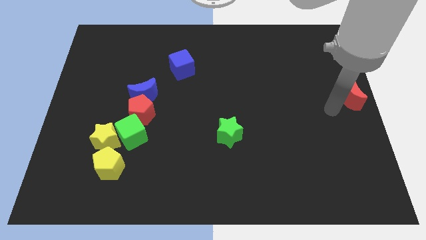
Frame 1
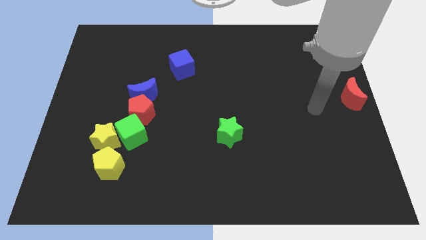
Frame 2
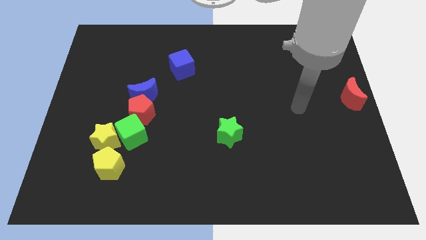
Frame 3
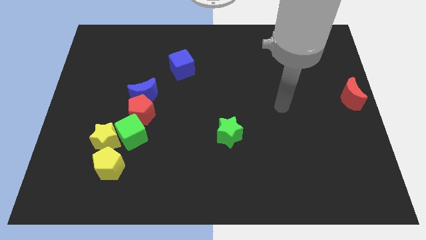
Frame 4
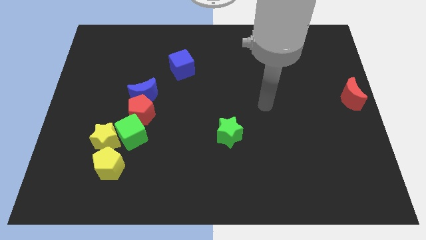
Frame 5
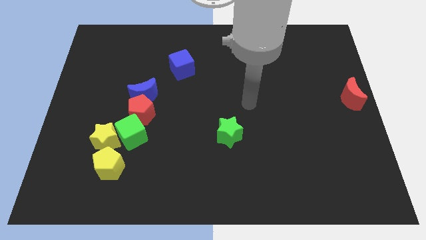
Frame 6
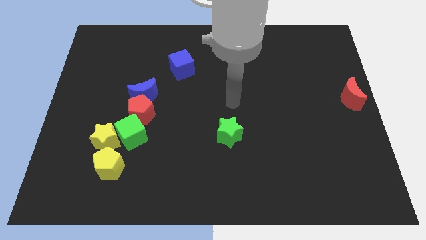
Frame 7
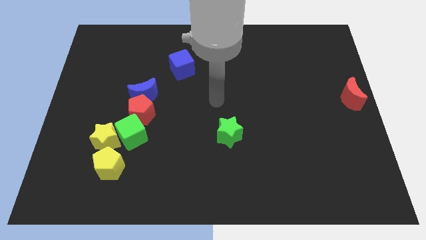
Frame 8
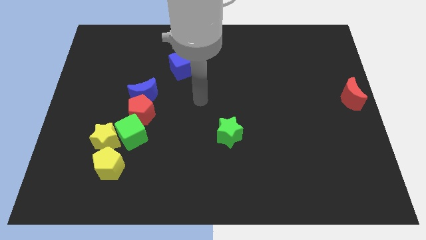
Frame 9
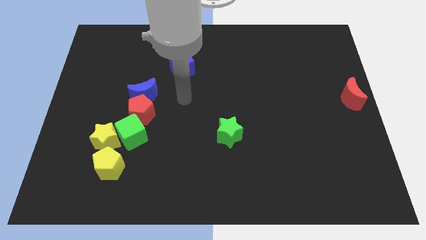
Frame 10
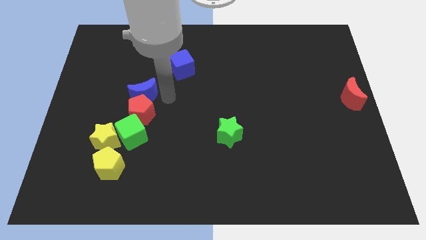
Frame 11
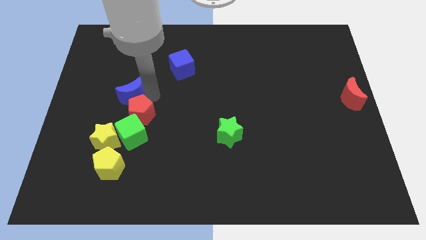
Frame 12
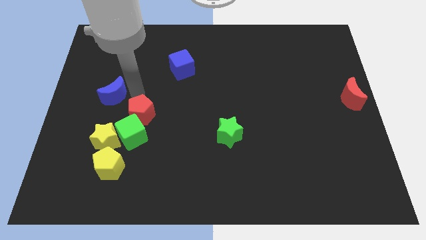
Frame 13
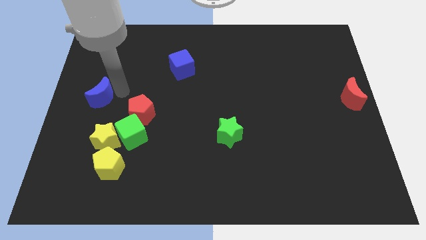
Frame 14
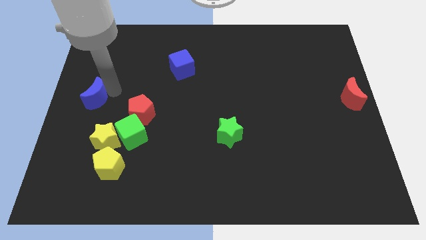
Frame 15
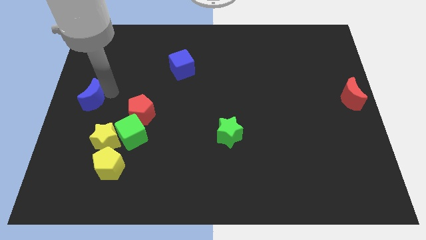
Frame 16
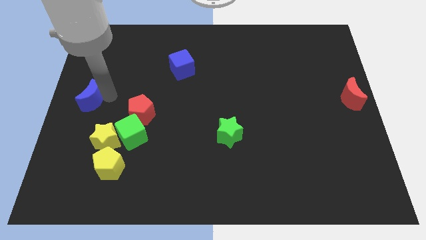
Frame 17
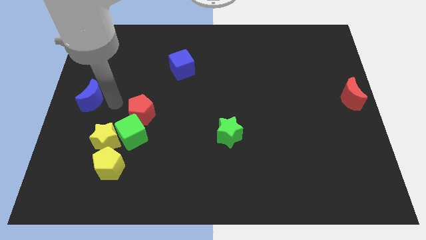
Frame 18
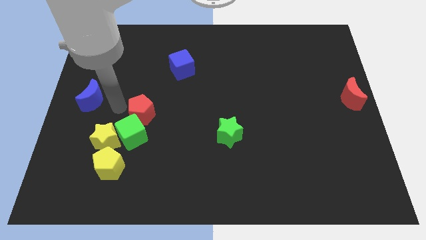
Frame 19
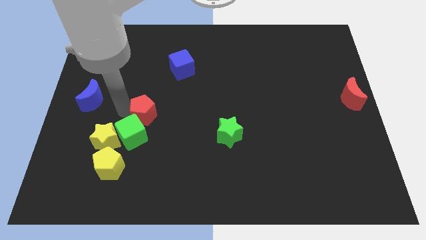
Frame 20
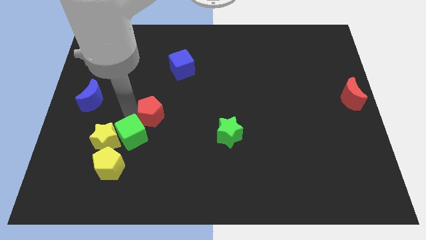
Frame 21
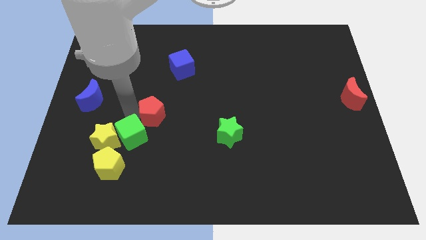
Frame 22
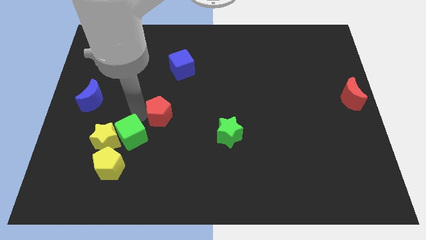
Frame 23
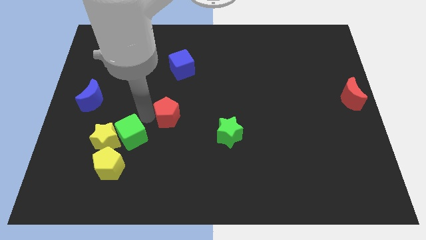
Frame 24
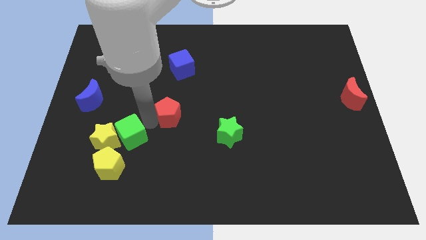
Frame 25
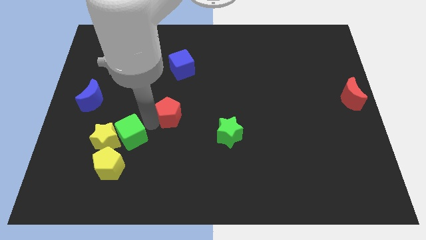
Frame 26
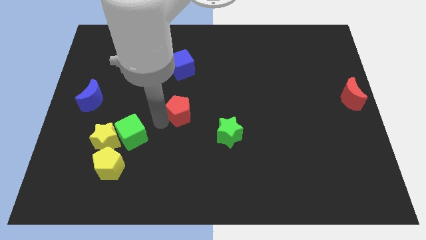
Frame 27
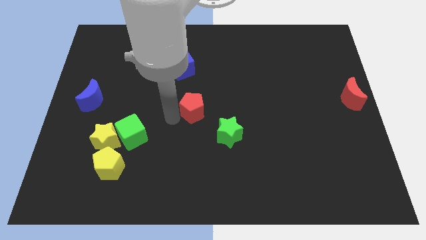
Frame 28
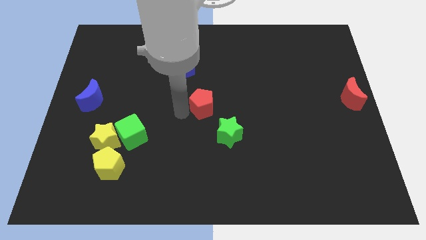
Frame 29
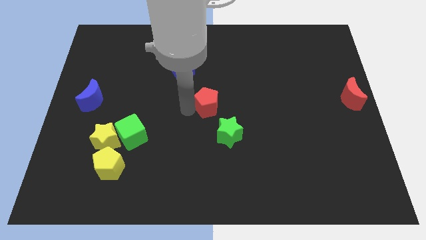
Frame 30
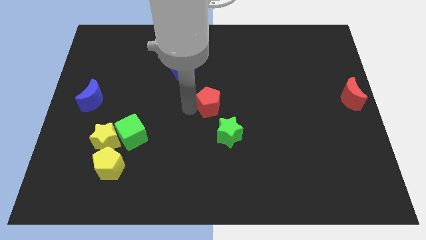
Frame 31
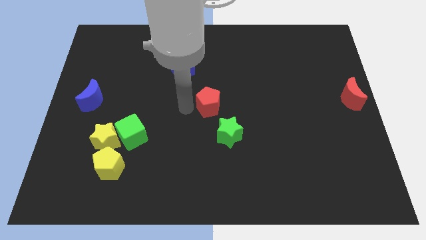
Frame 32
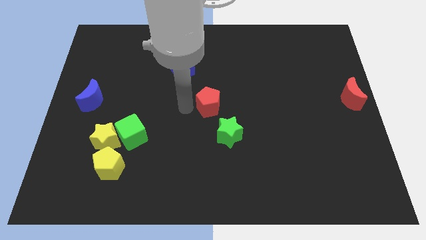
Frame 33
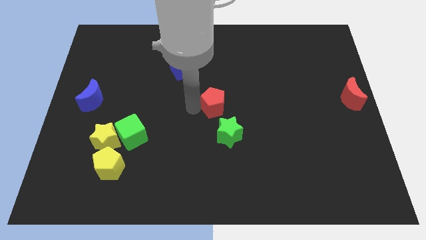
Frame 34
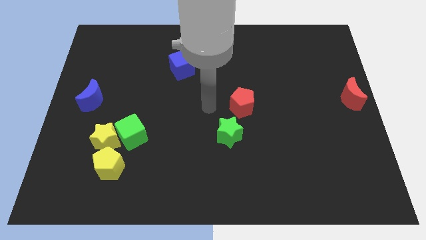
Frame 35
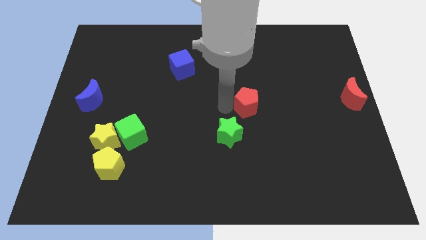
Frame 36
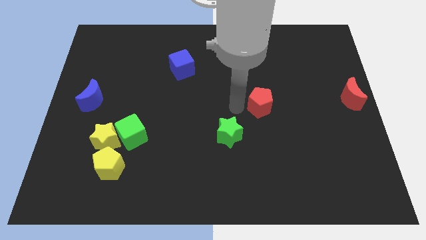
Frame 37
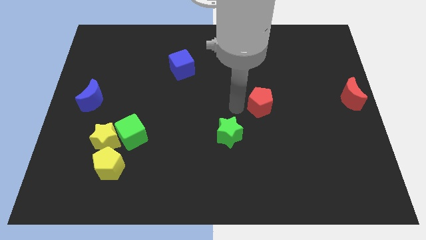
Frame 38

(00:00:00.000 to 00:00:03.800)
push red pentagon towards middle right side of the board

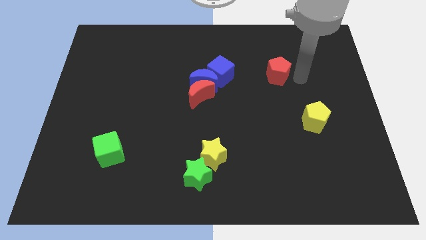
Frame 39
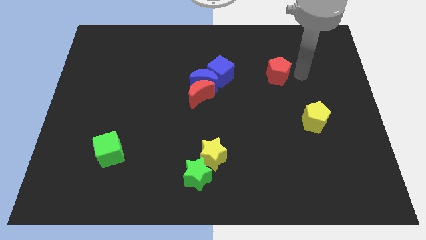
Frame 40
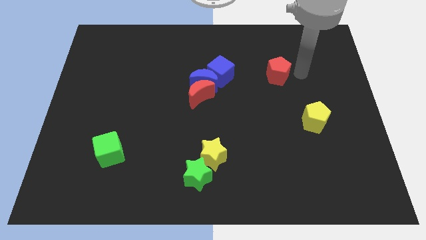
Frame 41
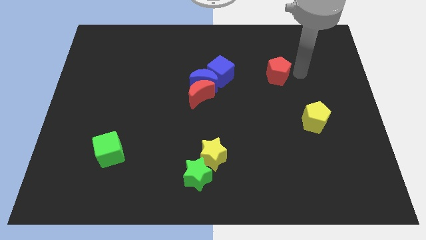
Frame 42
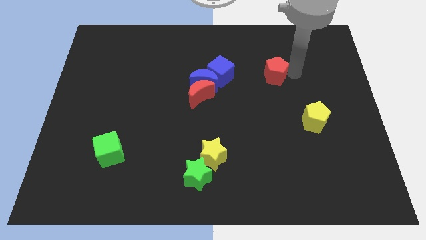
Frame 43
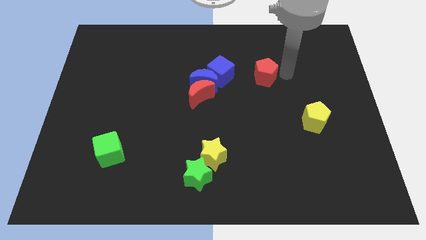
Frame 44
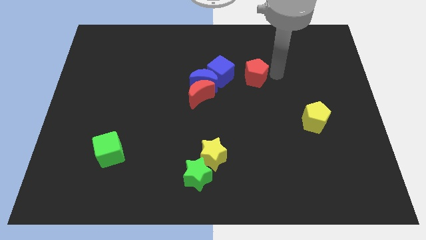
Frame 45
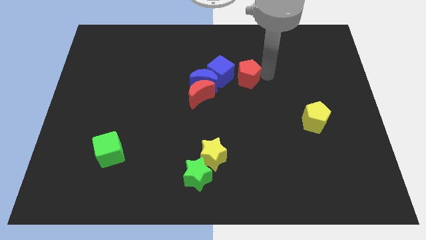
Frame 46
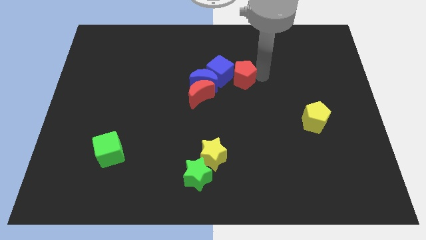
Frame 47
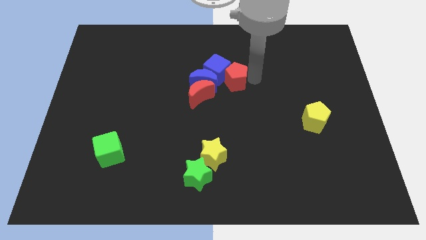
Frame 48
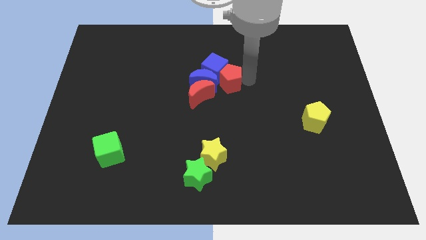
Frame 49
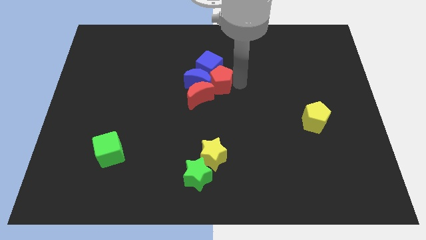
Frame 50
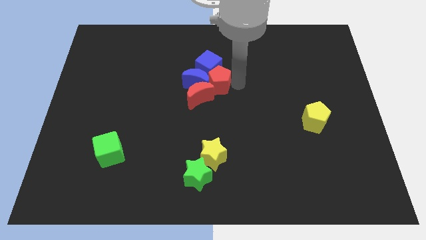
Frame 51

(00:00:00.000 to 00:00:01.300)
place the red pentagon diagonal to the red moon

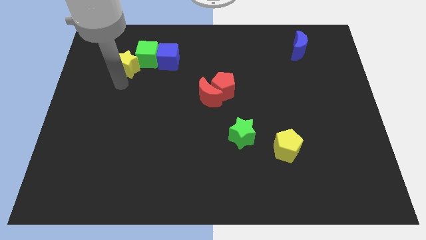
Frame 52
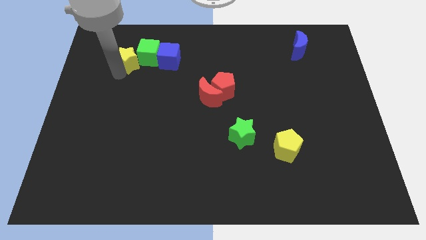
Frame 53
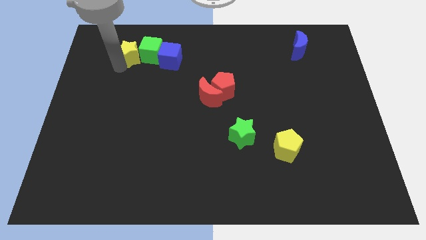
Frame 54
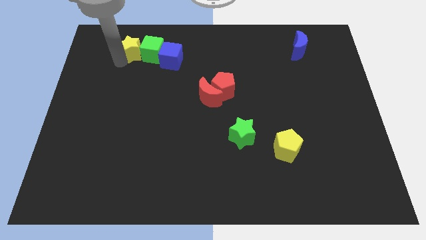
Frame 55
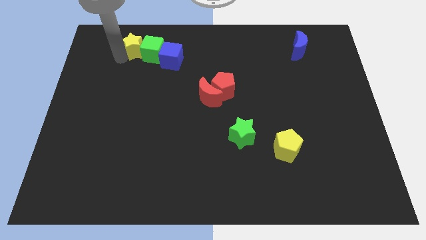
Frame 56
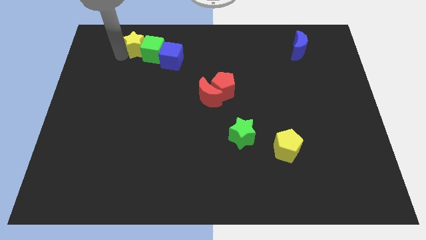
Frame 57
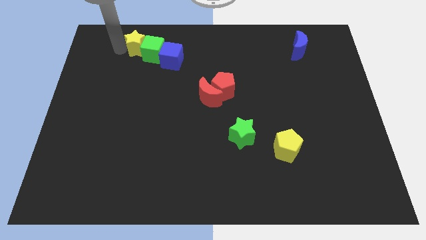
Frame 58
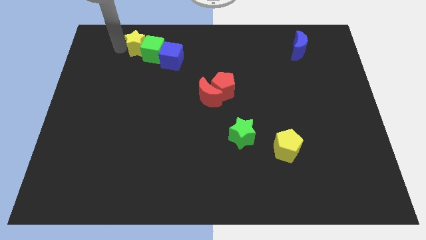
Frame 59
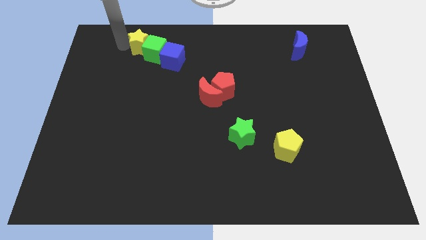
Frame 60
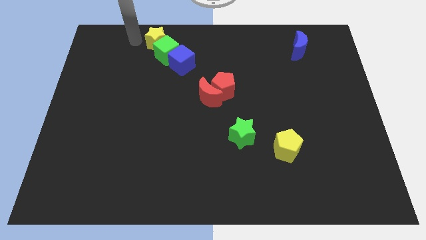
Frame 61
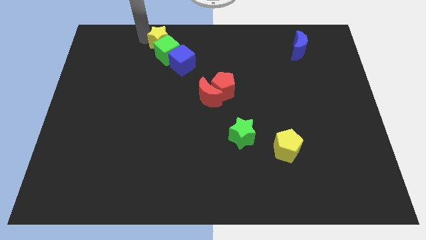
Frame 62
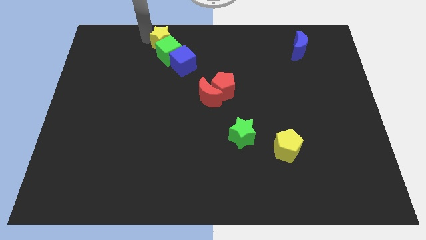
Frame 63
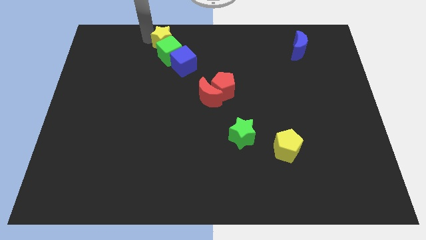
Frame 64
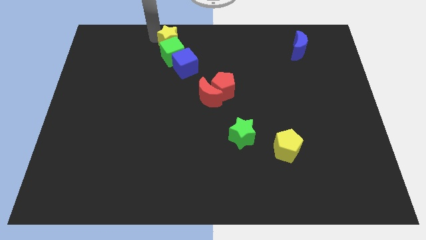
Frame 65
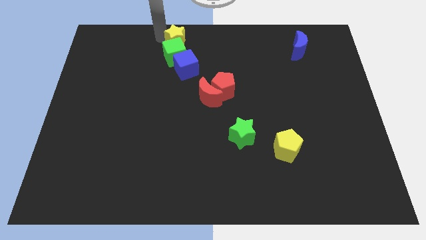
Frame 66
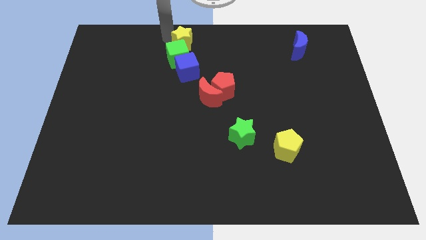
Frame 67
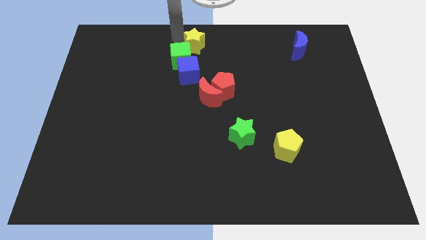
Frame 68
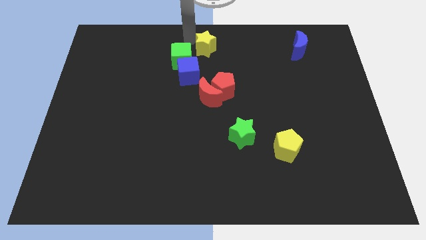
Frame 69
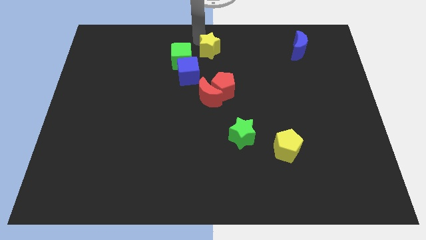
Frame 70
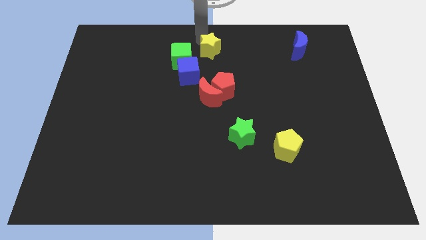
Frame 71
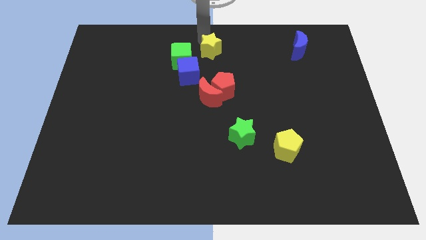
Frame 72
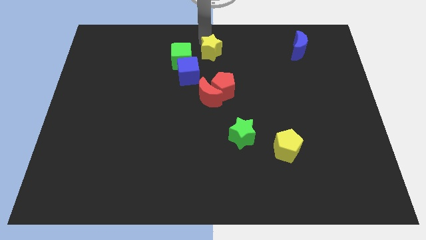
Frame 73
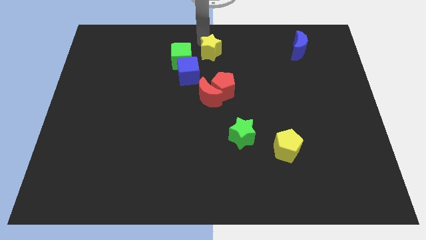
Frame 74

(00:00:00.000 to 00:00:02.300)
place the yellow star slightly top middle of the board

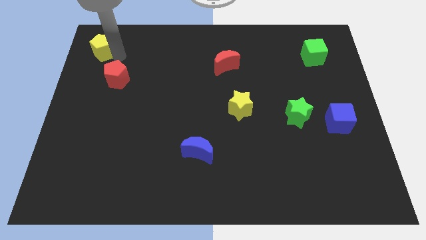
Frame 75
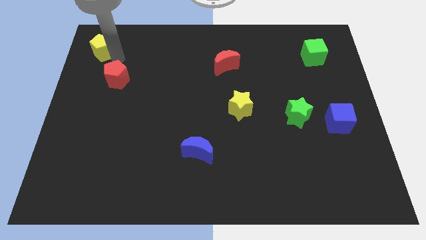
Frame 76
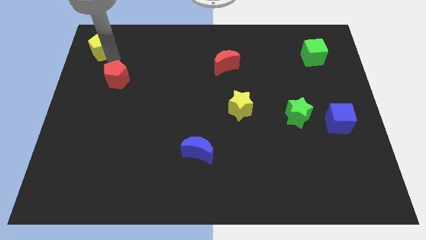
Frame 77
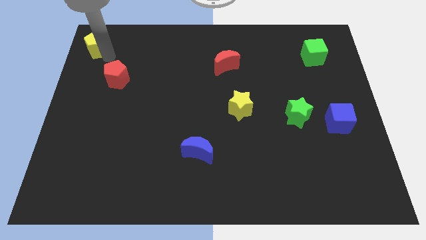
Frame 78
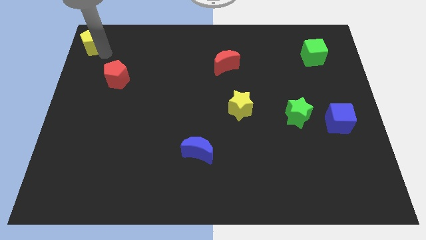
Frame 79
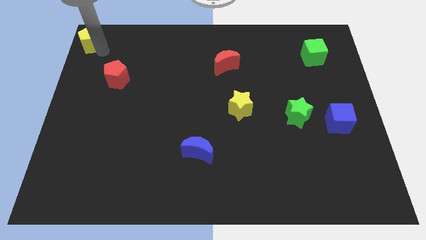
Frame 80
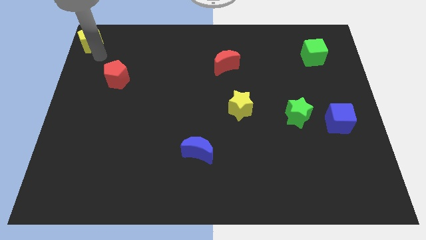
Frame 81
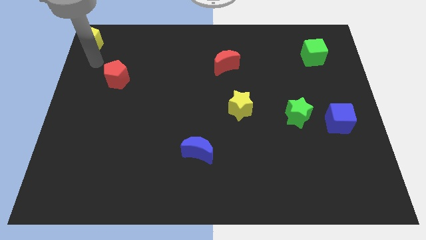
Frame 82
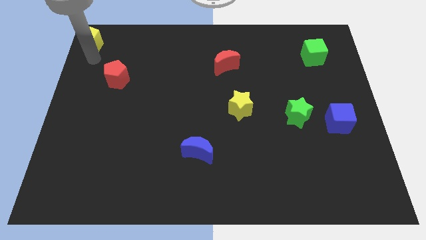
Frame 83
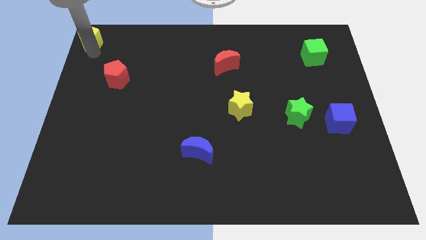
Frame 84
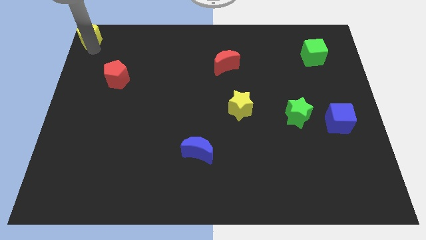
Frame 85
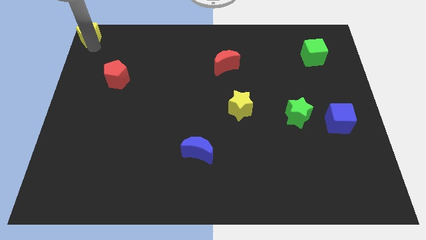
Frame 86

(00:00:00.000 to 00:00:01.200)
move the yellow pentagon to the top left corner

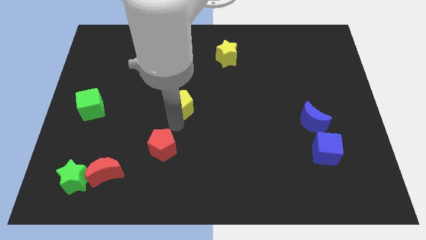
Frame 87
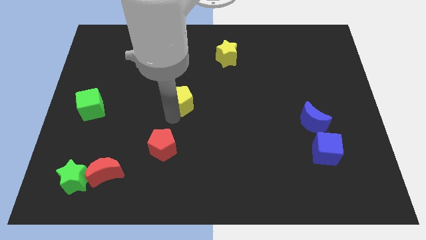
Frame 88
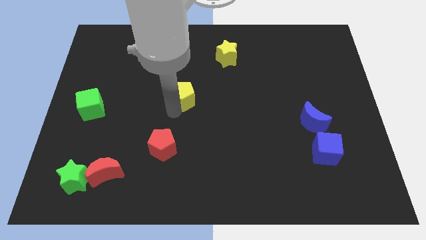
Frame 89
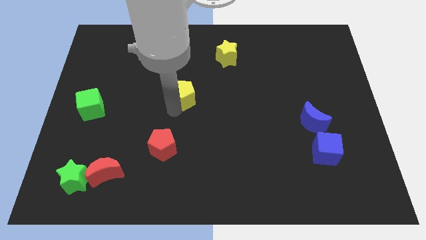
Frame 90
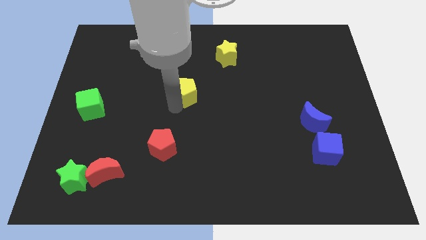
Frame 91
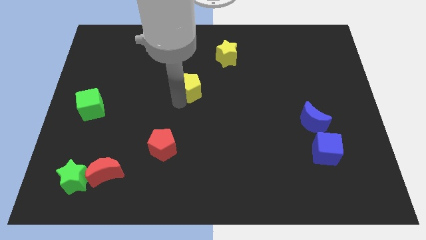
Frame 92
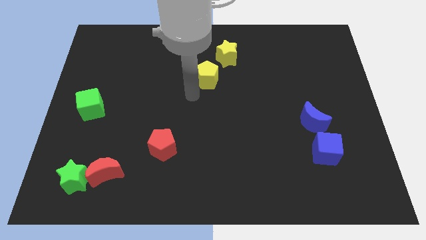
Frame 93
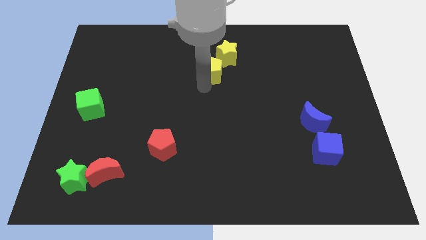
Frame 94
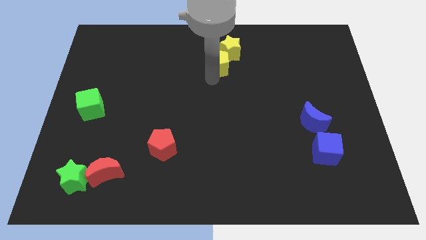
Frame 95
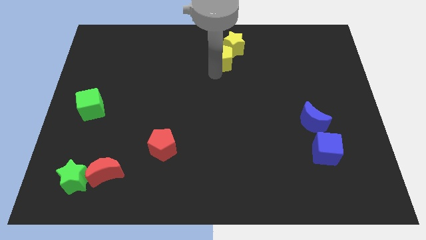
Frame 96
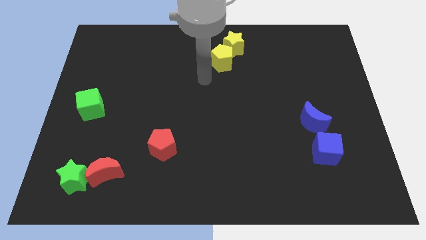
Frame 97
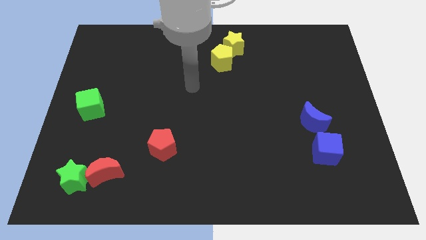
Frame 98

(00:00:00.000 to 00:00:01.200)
place the yellow pentagon to the bottom of the yellow star
